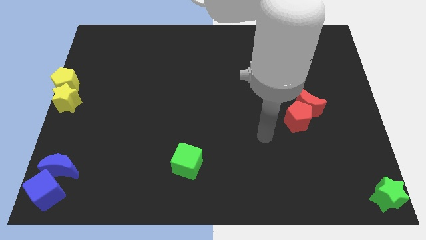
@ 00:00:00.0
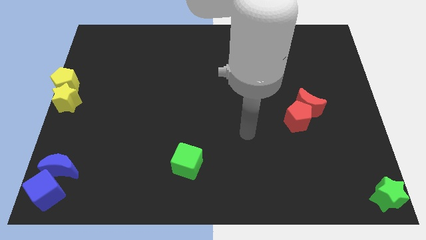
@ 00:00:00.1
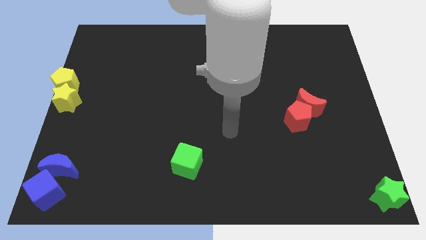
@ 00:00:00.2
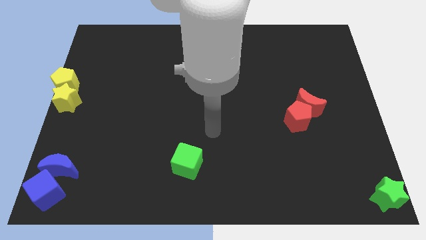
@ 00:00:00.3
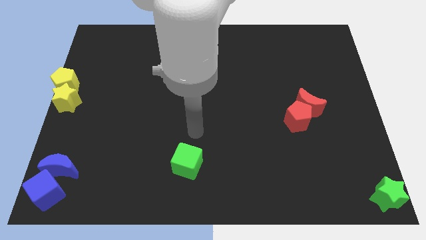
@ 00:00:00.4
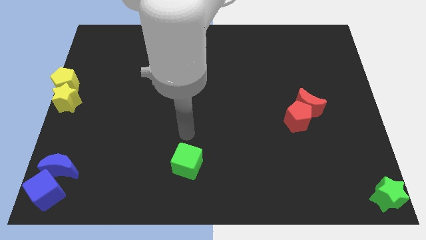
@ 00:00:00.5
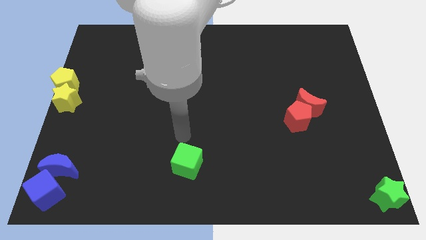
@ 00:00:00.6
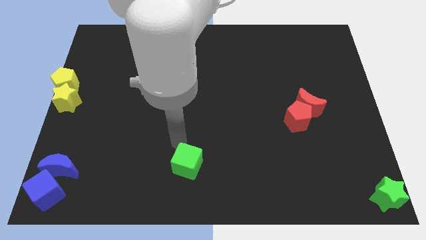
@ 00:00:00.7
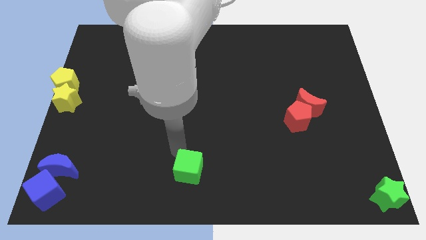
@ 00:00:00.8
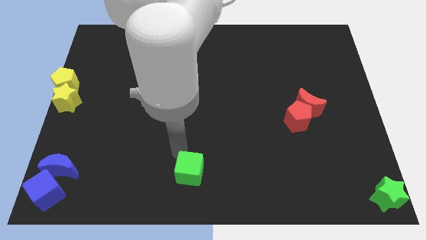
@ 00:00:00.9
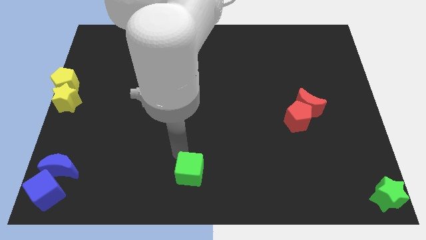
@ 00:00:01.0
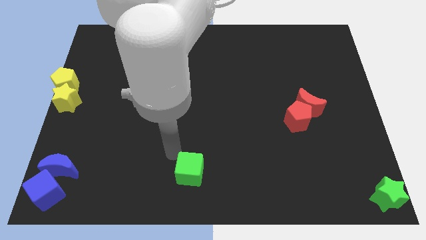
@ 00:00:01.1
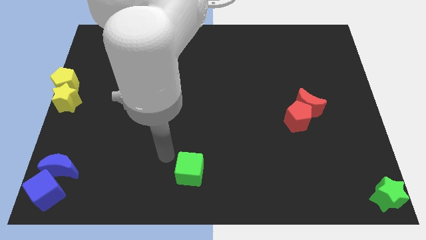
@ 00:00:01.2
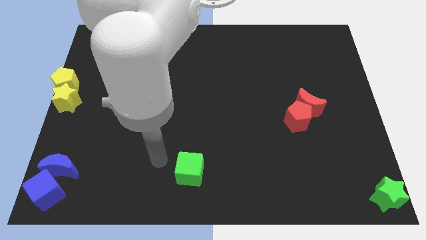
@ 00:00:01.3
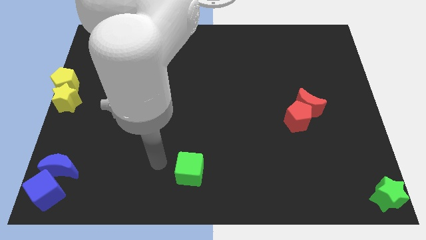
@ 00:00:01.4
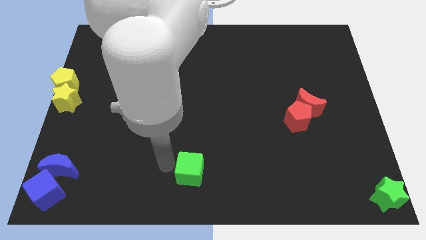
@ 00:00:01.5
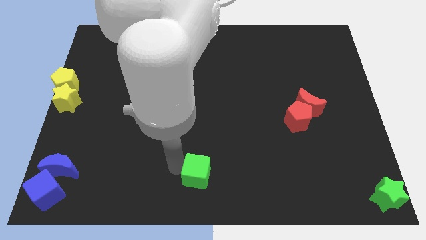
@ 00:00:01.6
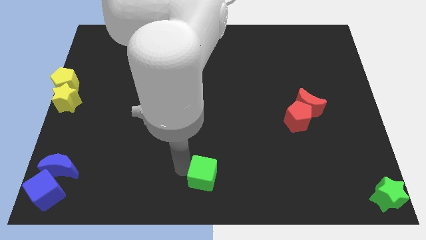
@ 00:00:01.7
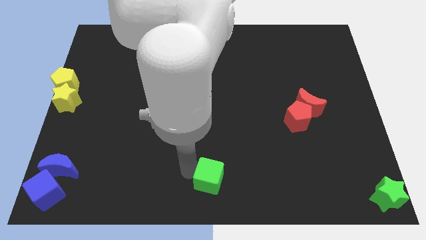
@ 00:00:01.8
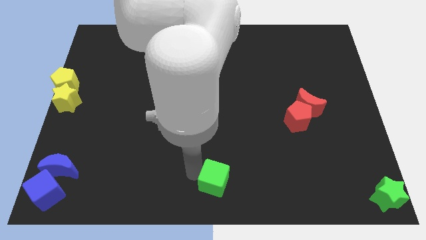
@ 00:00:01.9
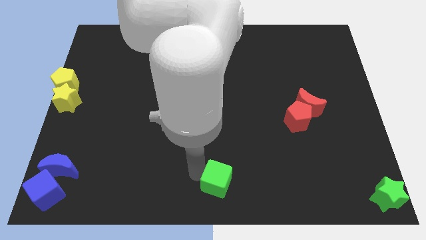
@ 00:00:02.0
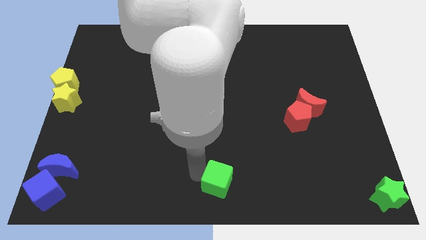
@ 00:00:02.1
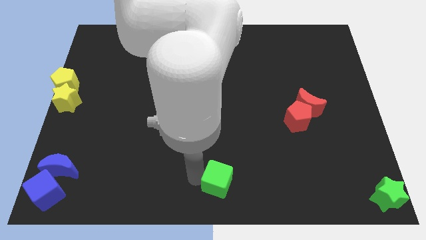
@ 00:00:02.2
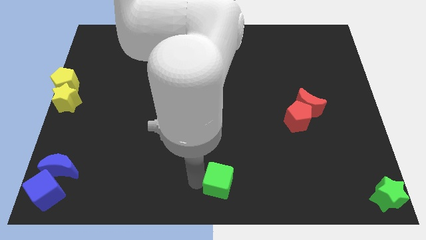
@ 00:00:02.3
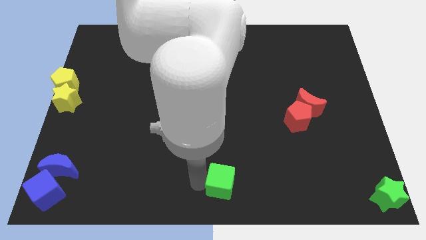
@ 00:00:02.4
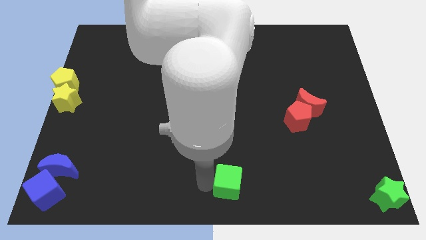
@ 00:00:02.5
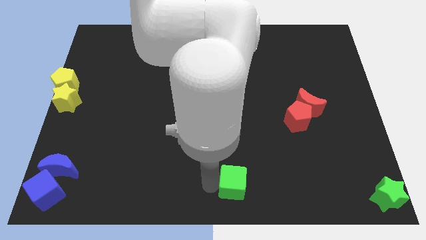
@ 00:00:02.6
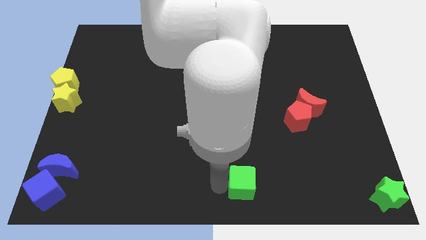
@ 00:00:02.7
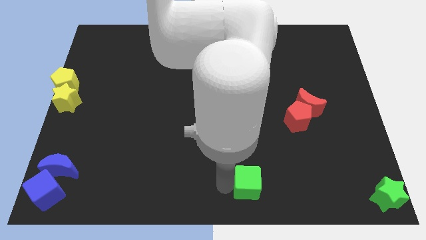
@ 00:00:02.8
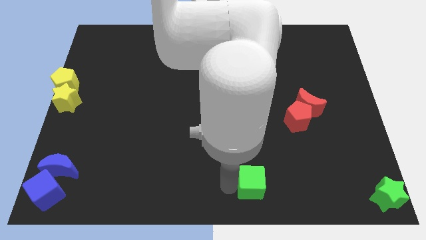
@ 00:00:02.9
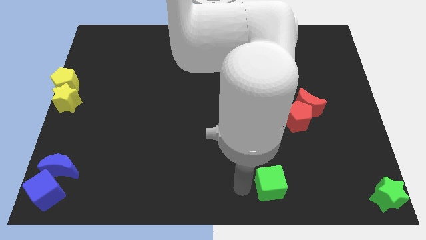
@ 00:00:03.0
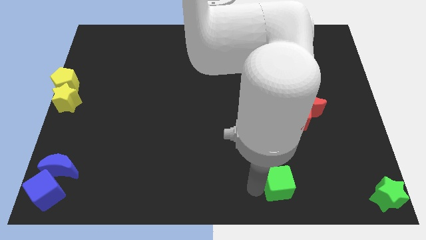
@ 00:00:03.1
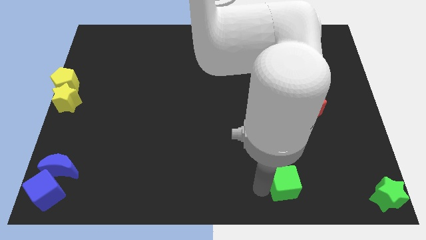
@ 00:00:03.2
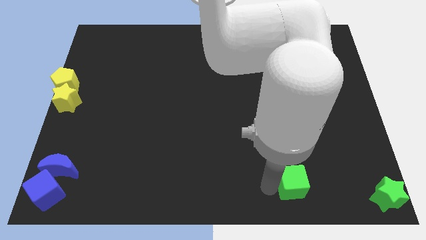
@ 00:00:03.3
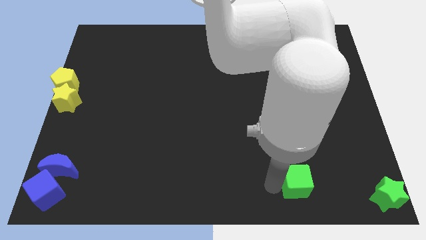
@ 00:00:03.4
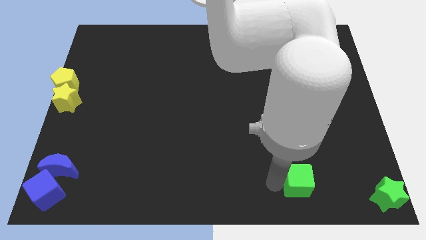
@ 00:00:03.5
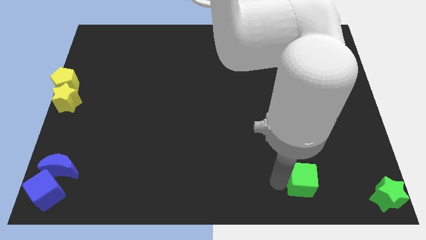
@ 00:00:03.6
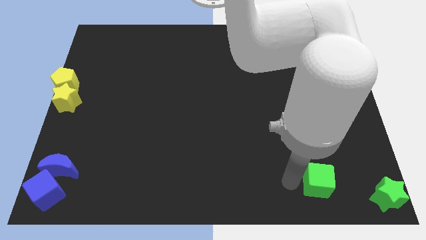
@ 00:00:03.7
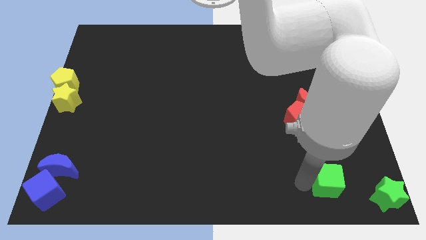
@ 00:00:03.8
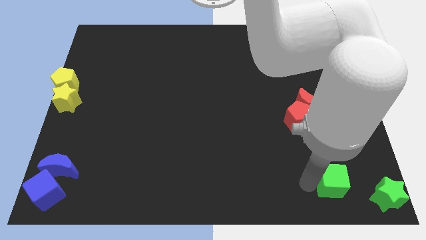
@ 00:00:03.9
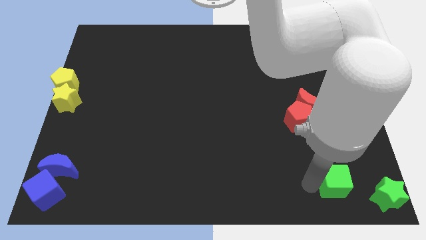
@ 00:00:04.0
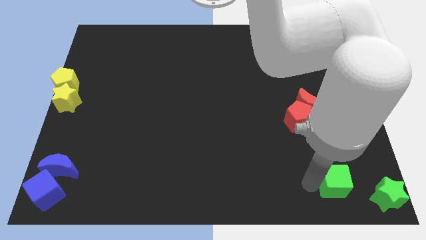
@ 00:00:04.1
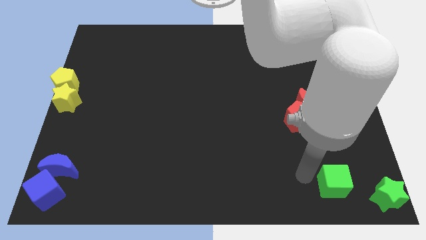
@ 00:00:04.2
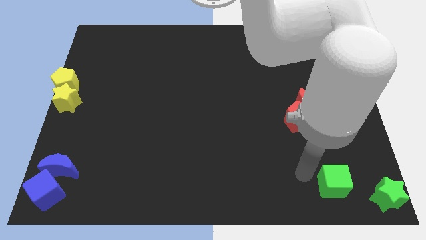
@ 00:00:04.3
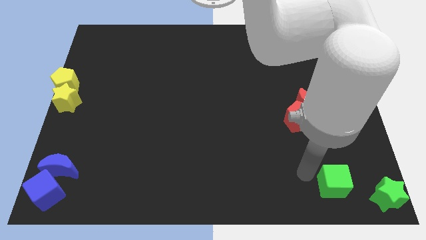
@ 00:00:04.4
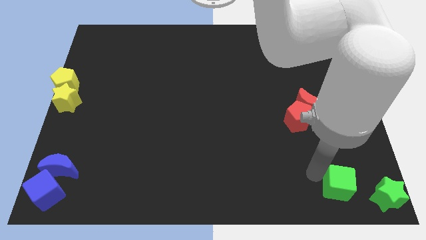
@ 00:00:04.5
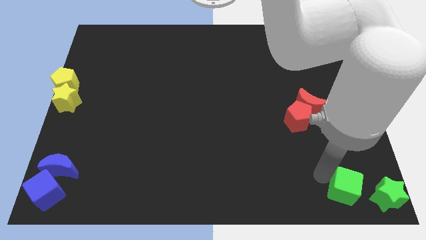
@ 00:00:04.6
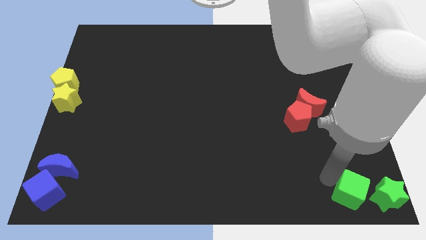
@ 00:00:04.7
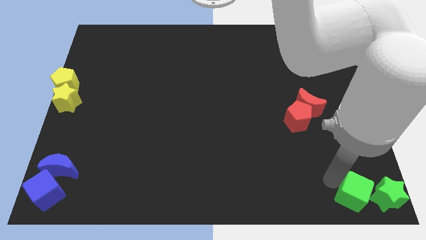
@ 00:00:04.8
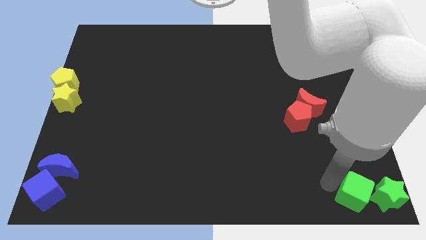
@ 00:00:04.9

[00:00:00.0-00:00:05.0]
move the green cube to the left of the green star

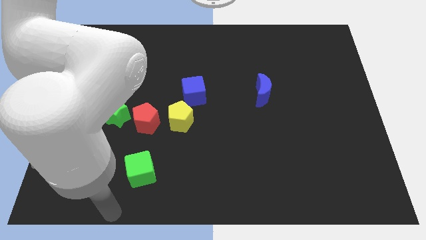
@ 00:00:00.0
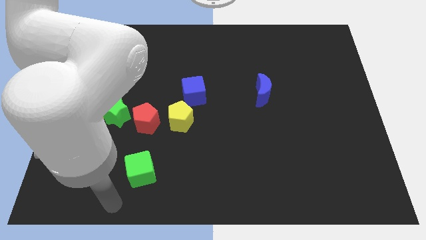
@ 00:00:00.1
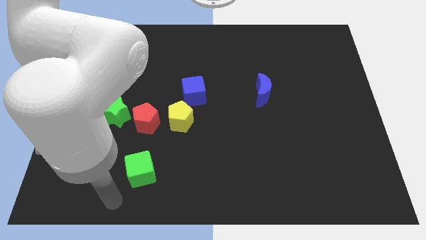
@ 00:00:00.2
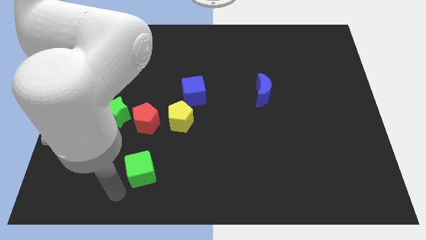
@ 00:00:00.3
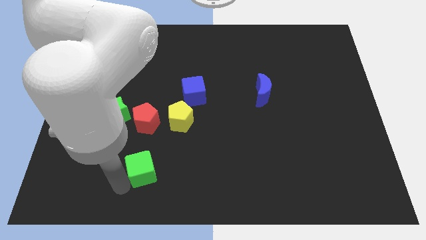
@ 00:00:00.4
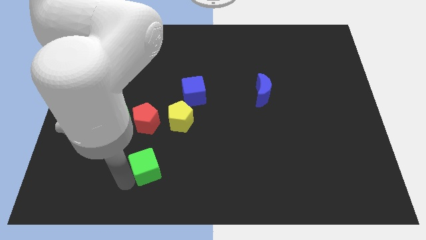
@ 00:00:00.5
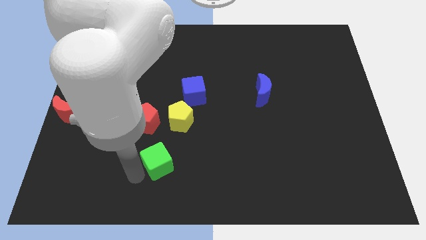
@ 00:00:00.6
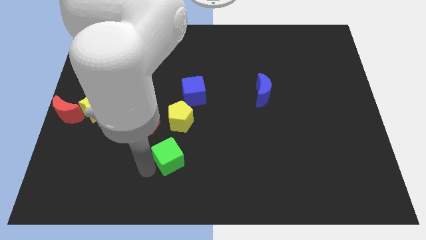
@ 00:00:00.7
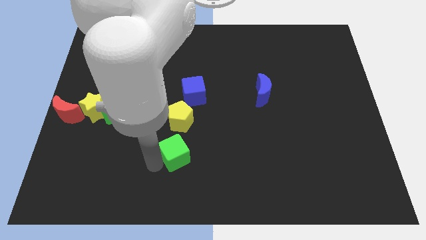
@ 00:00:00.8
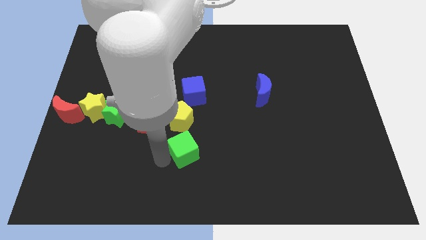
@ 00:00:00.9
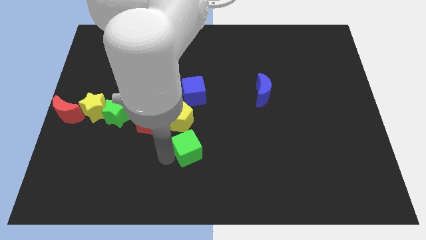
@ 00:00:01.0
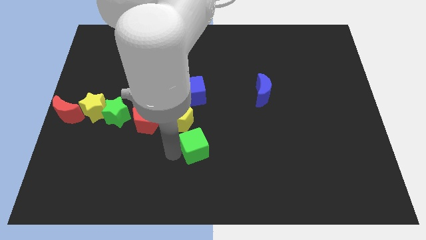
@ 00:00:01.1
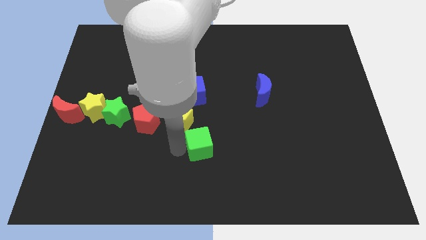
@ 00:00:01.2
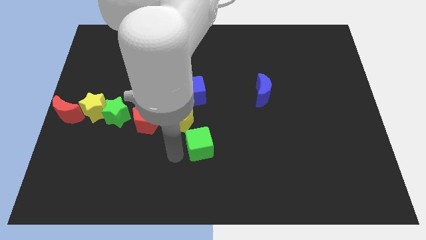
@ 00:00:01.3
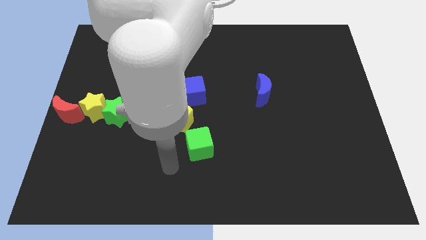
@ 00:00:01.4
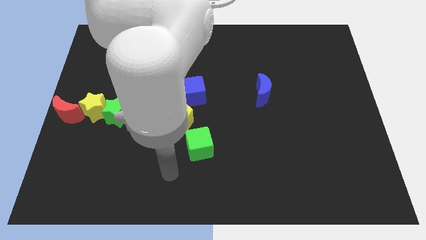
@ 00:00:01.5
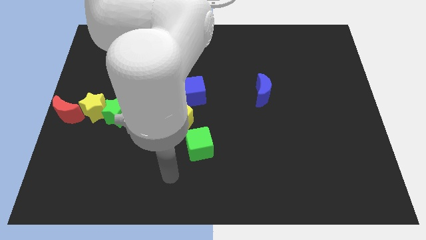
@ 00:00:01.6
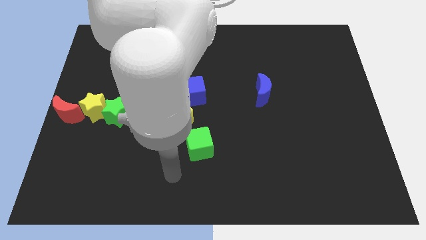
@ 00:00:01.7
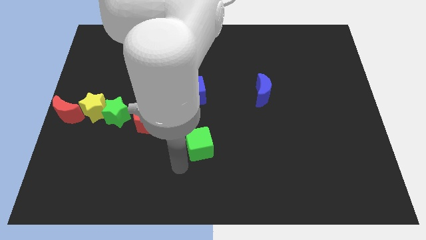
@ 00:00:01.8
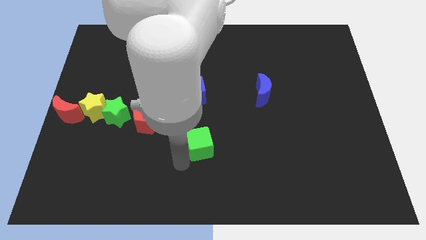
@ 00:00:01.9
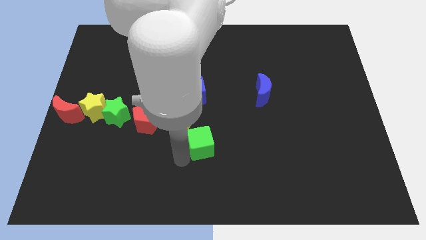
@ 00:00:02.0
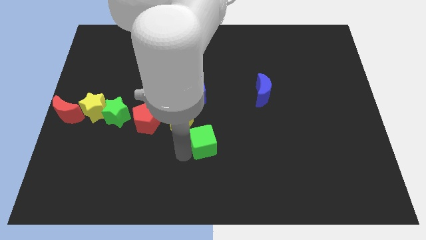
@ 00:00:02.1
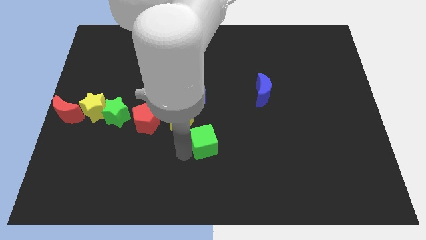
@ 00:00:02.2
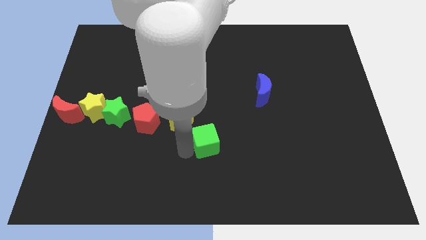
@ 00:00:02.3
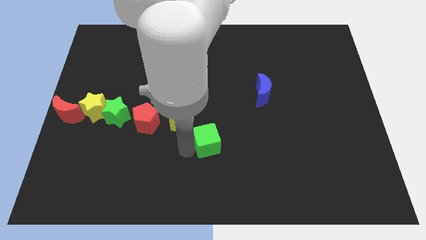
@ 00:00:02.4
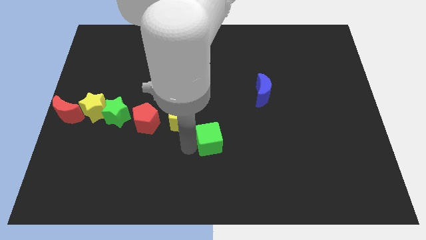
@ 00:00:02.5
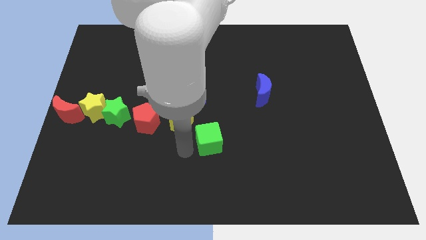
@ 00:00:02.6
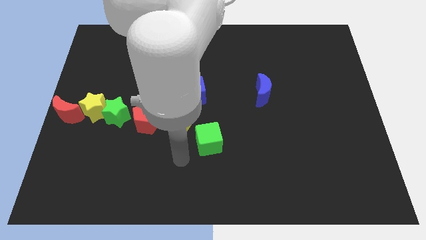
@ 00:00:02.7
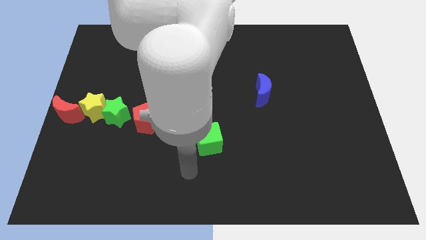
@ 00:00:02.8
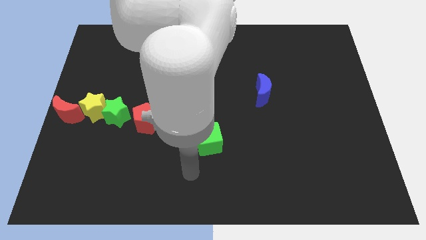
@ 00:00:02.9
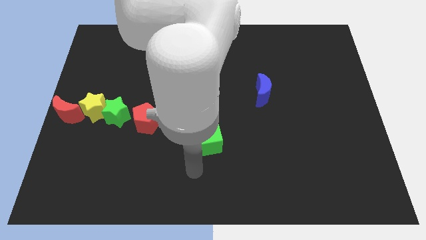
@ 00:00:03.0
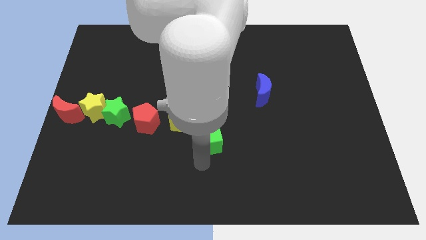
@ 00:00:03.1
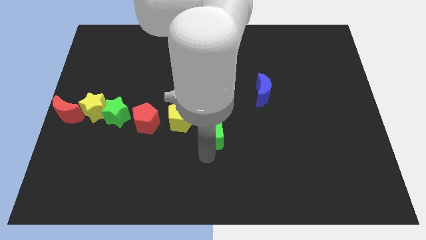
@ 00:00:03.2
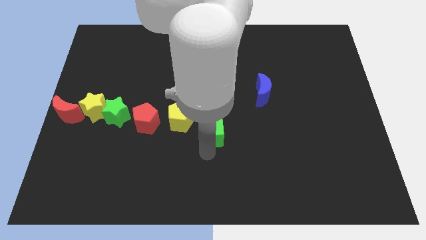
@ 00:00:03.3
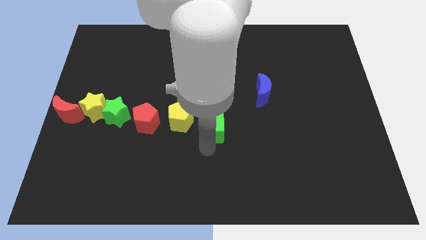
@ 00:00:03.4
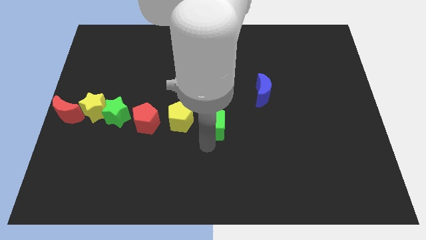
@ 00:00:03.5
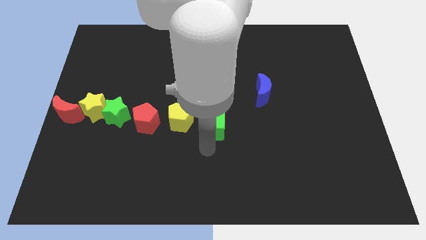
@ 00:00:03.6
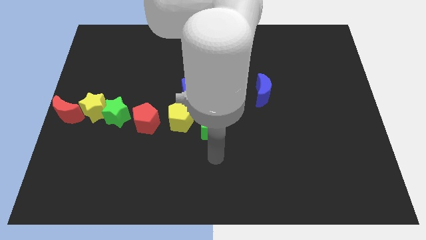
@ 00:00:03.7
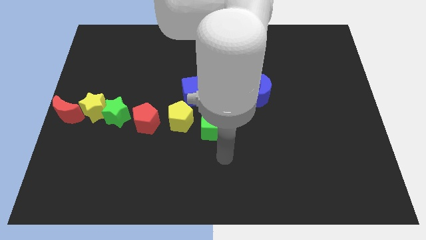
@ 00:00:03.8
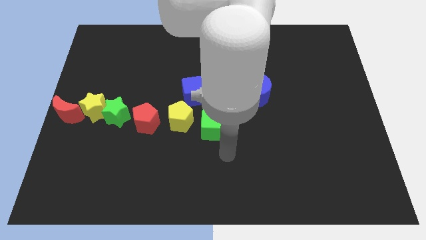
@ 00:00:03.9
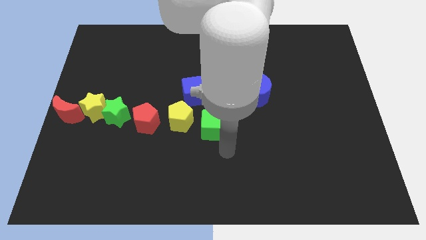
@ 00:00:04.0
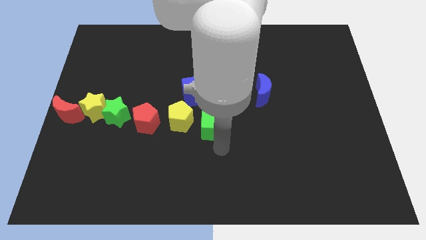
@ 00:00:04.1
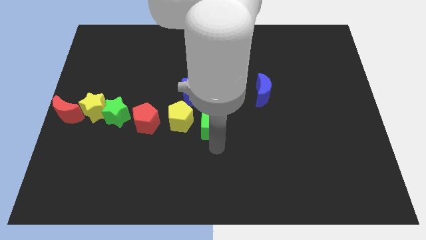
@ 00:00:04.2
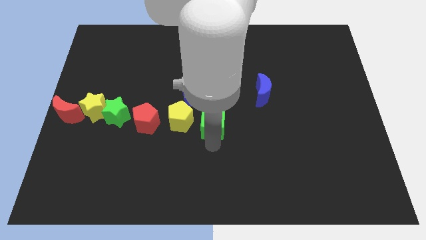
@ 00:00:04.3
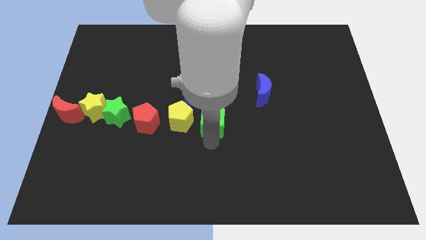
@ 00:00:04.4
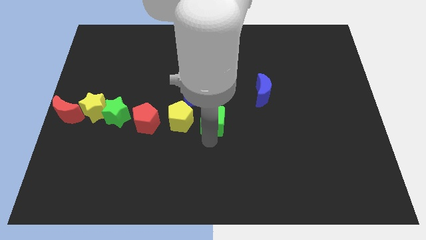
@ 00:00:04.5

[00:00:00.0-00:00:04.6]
move the green cube to the right of the yellow pentagon
